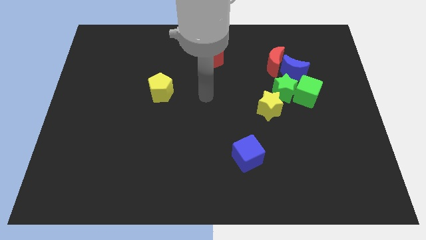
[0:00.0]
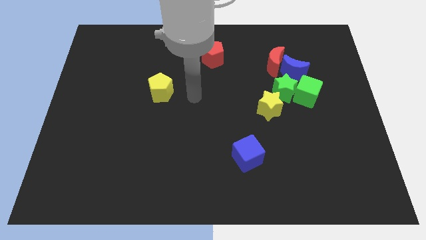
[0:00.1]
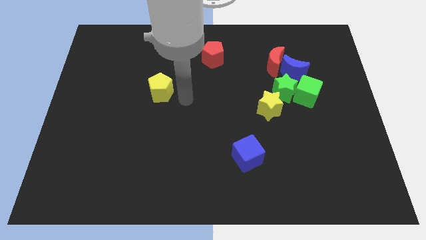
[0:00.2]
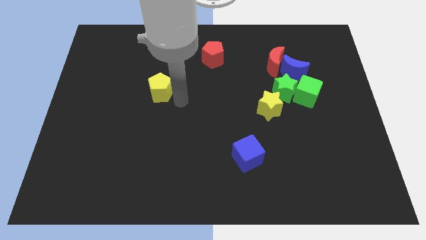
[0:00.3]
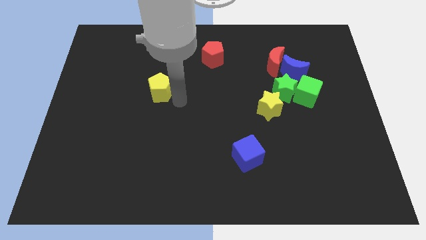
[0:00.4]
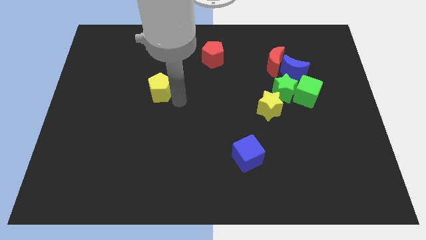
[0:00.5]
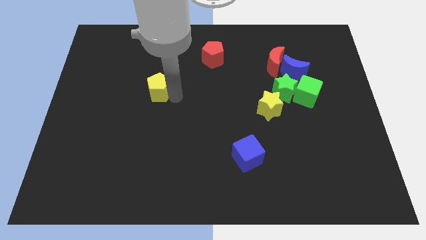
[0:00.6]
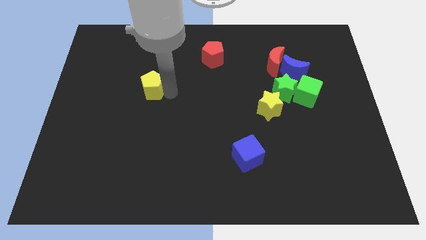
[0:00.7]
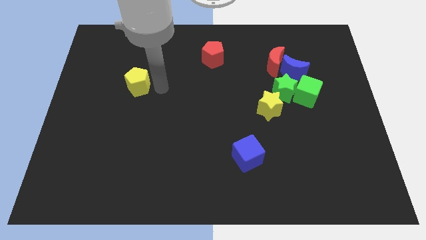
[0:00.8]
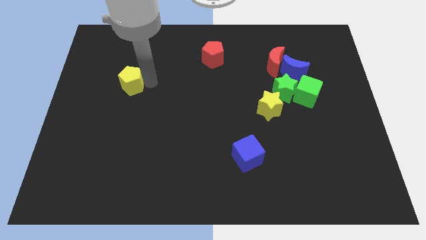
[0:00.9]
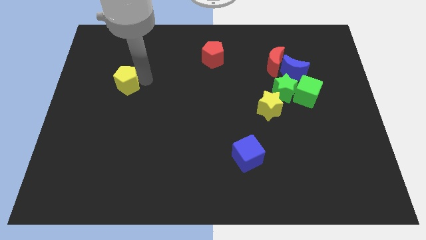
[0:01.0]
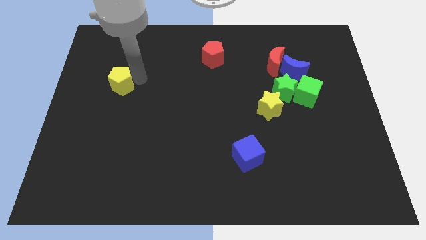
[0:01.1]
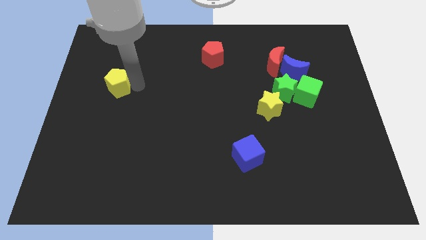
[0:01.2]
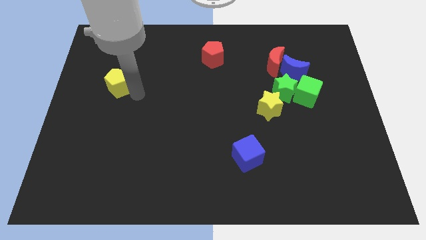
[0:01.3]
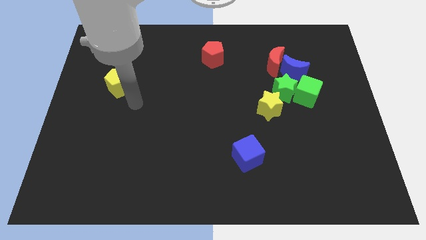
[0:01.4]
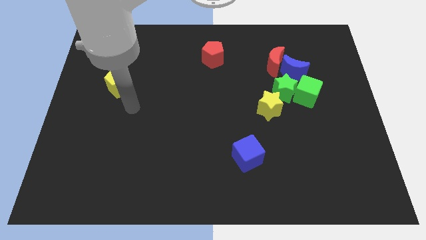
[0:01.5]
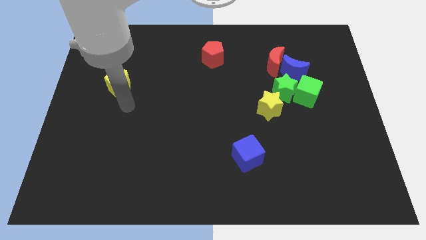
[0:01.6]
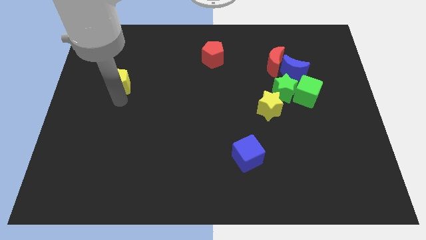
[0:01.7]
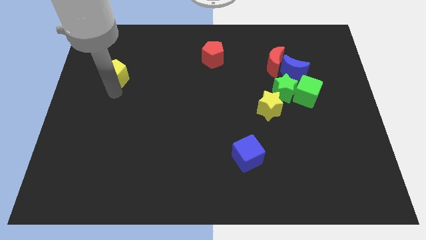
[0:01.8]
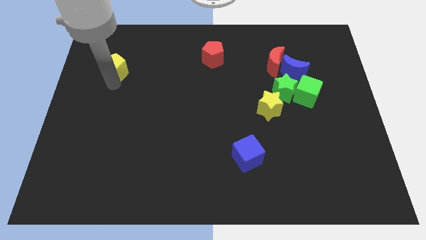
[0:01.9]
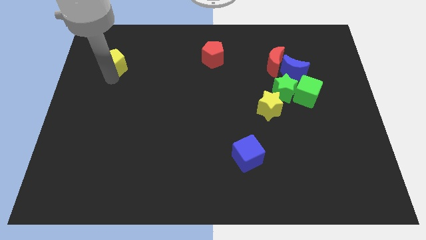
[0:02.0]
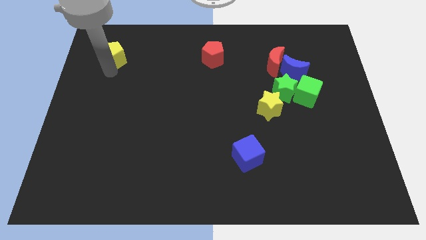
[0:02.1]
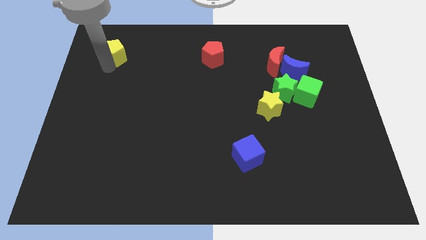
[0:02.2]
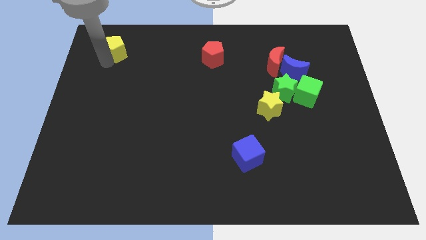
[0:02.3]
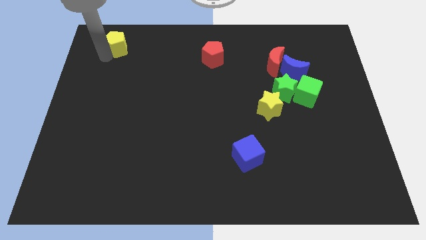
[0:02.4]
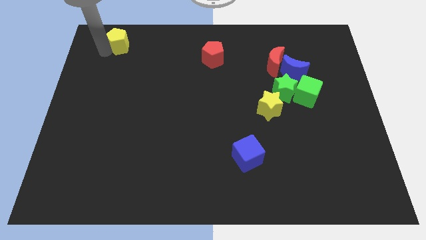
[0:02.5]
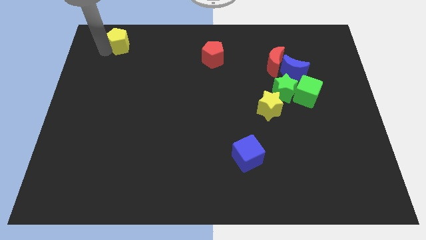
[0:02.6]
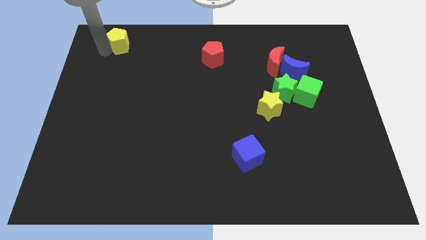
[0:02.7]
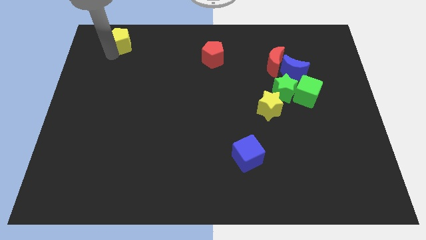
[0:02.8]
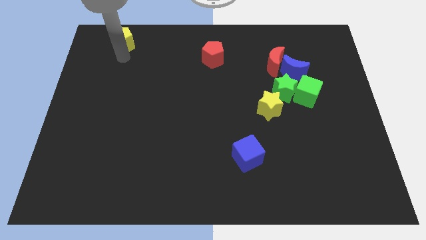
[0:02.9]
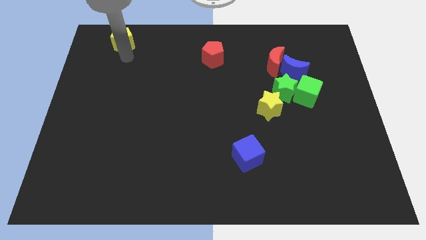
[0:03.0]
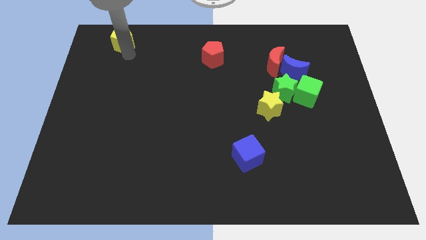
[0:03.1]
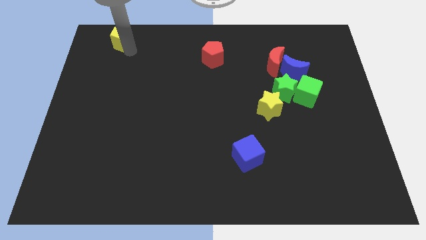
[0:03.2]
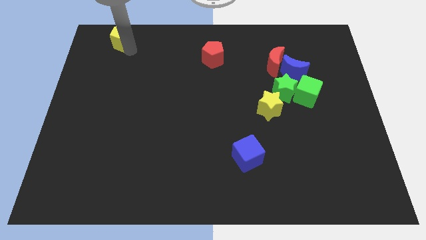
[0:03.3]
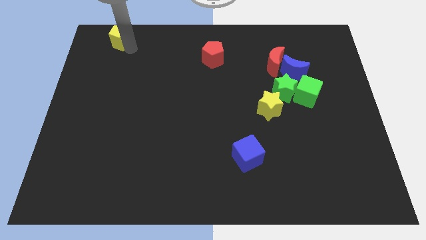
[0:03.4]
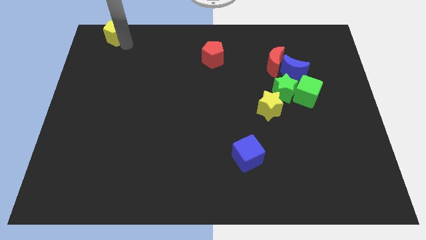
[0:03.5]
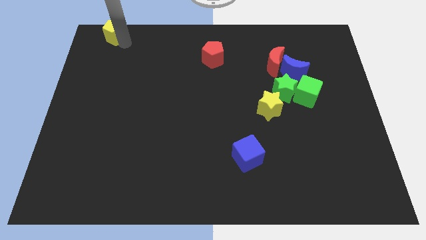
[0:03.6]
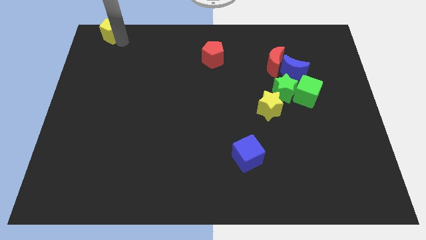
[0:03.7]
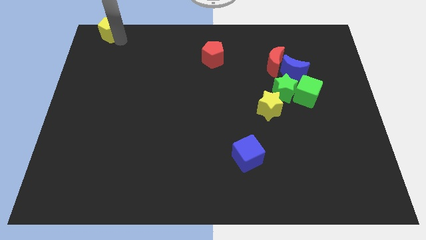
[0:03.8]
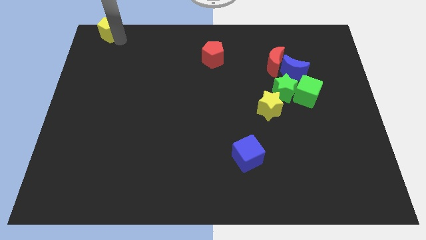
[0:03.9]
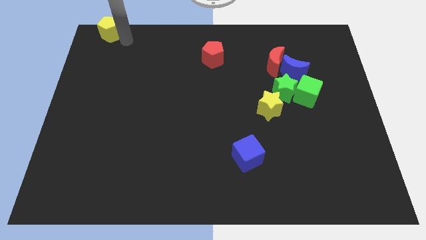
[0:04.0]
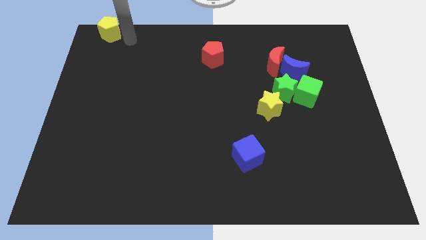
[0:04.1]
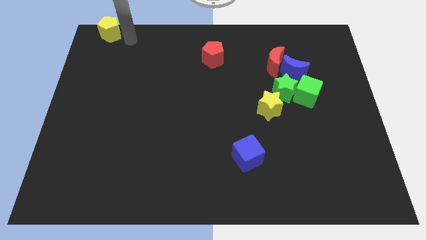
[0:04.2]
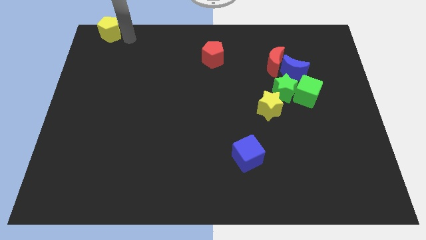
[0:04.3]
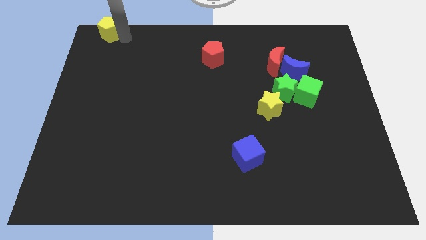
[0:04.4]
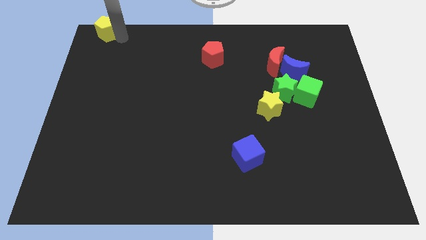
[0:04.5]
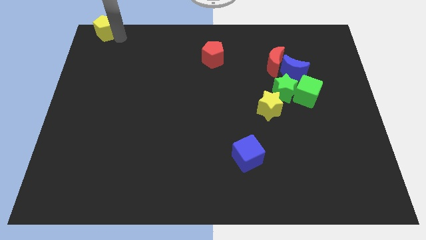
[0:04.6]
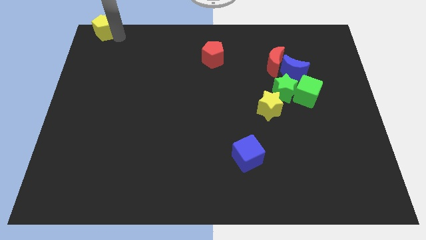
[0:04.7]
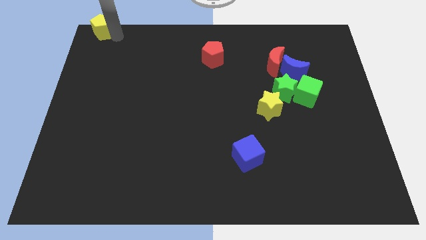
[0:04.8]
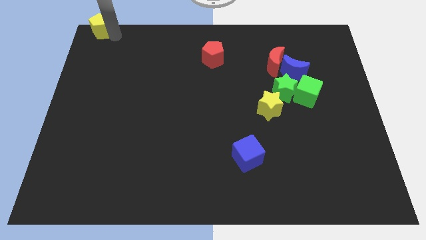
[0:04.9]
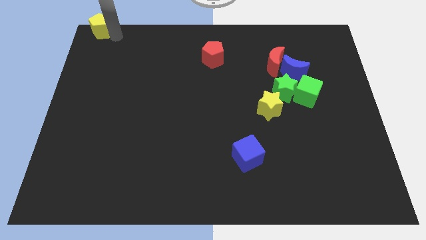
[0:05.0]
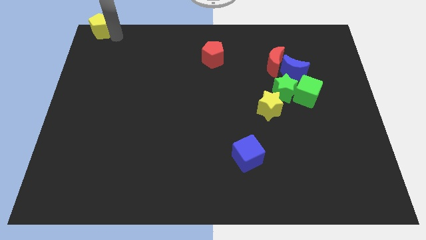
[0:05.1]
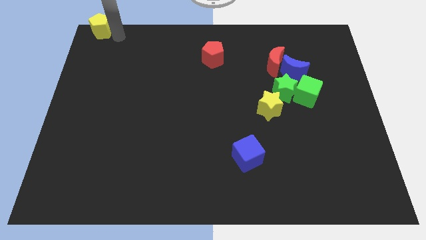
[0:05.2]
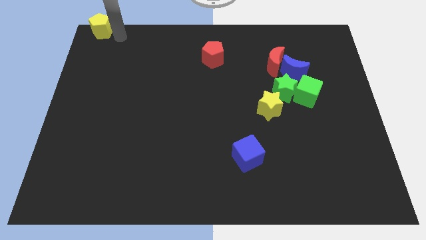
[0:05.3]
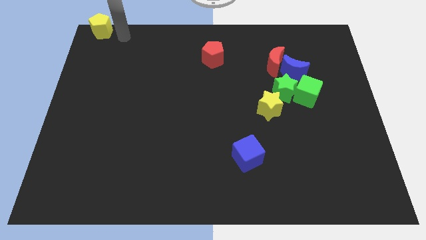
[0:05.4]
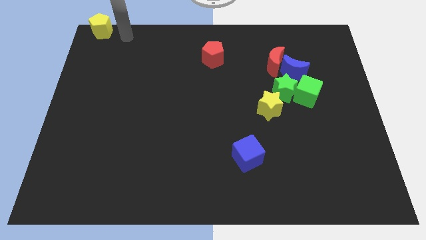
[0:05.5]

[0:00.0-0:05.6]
push the yellow pentagon to the top left corner of the board

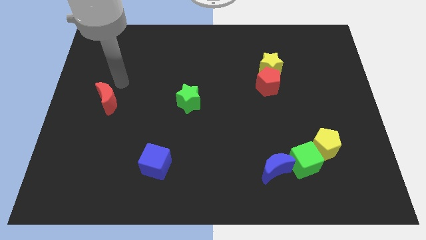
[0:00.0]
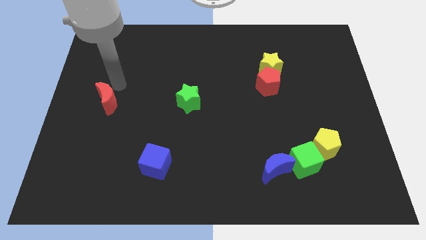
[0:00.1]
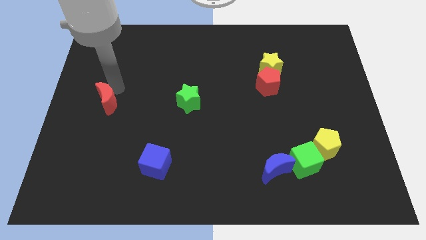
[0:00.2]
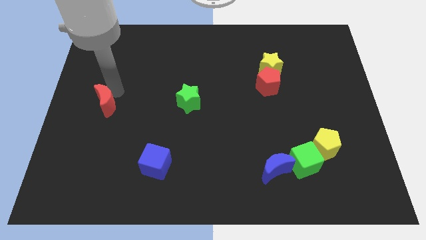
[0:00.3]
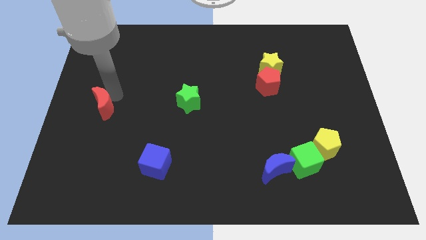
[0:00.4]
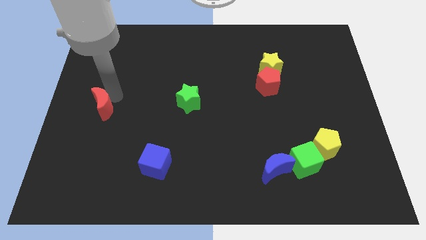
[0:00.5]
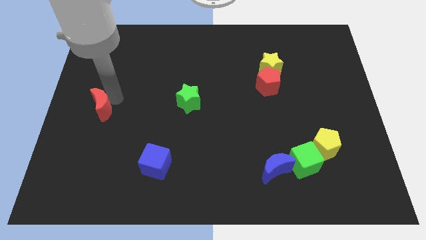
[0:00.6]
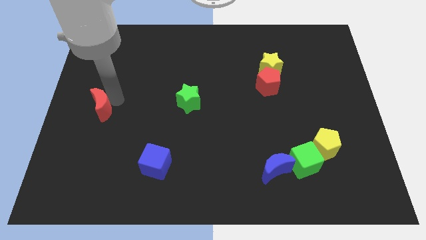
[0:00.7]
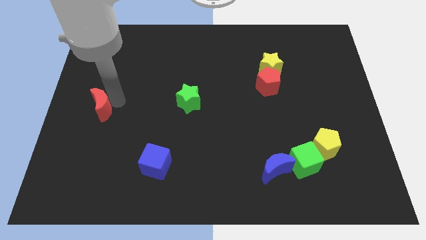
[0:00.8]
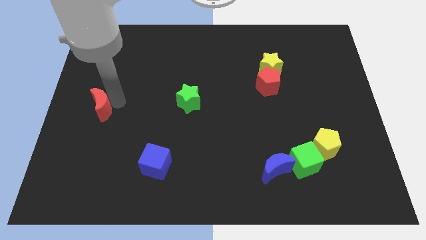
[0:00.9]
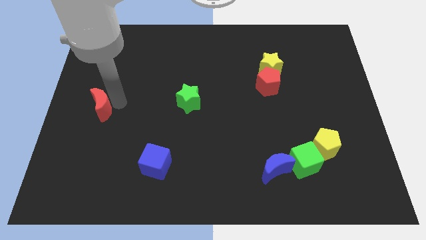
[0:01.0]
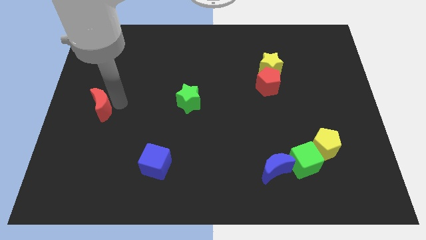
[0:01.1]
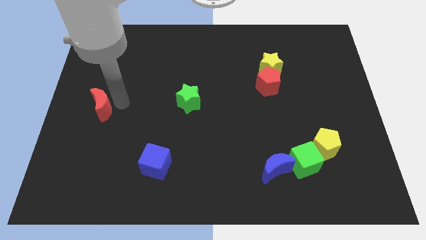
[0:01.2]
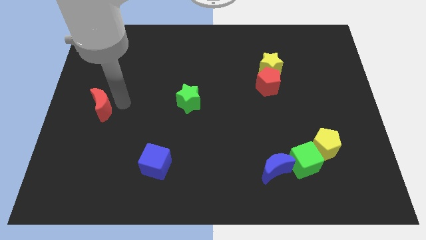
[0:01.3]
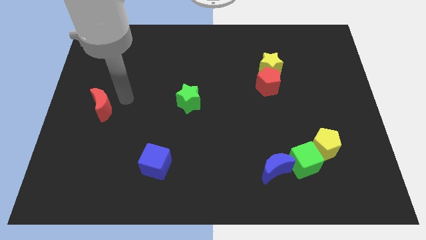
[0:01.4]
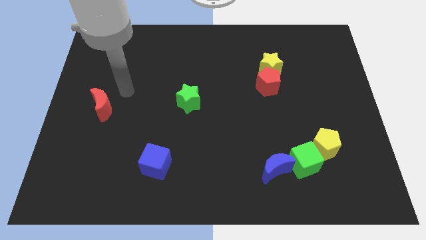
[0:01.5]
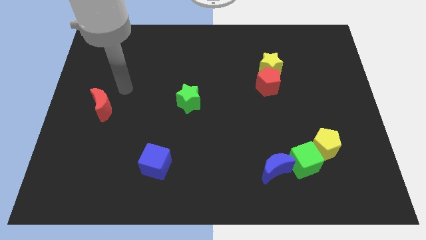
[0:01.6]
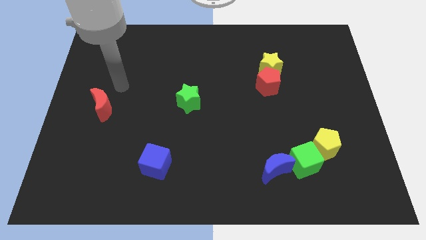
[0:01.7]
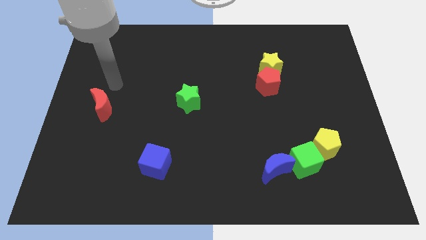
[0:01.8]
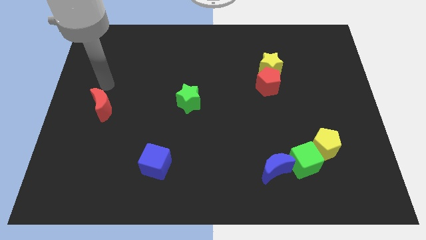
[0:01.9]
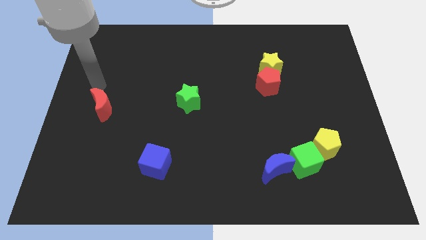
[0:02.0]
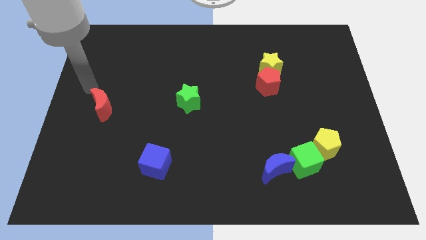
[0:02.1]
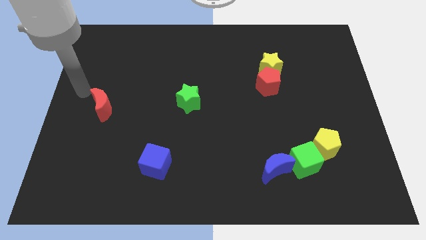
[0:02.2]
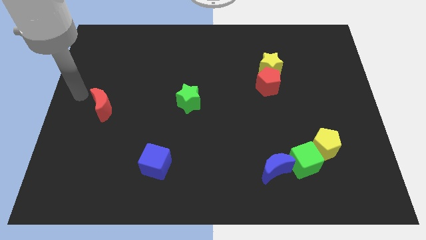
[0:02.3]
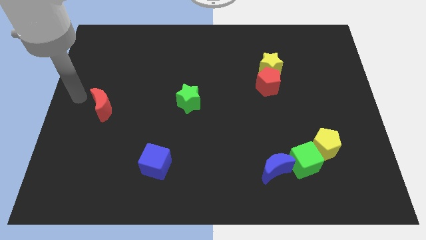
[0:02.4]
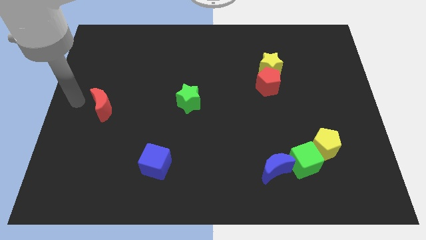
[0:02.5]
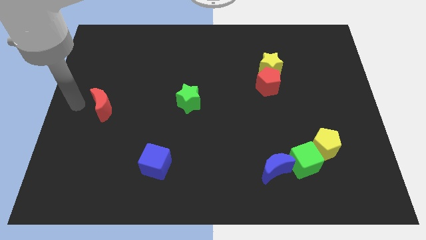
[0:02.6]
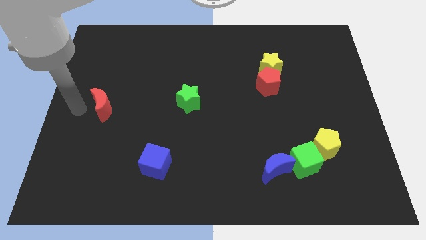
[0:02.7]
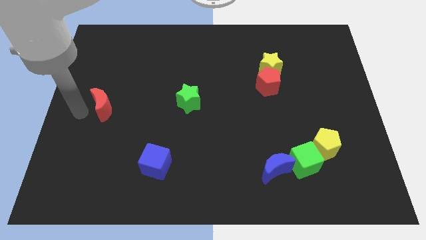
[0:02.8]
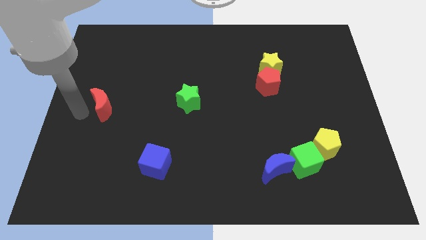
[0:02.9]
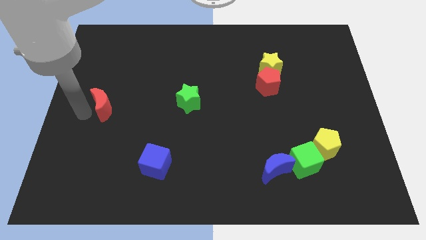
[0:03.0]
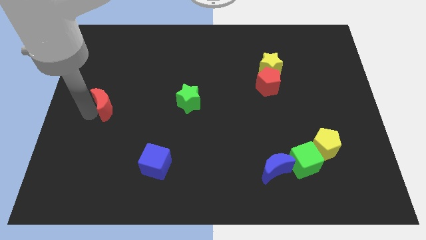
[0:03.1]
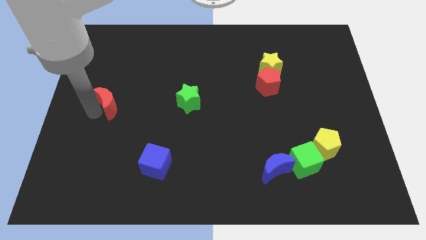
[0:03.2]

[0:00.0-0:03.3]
place the arm left to the red moon

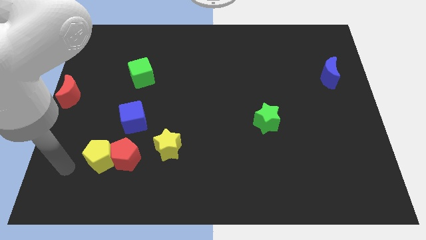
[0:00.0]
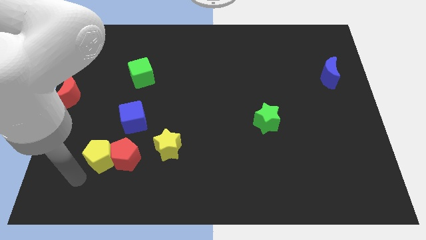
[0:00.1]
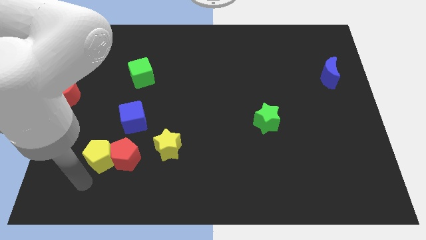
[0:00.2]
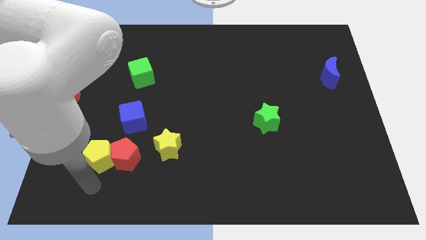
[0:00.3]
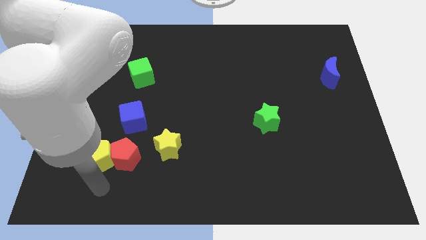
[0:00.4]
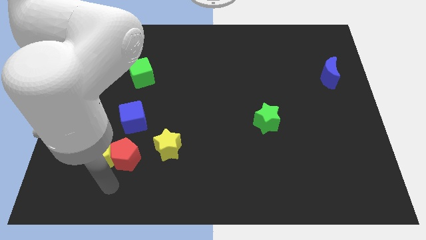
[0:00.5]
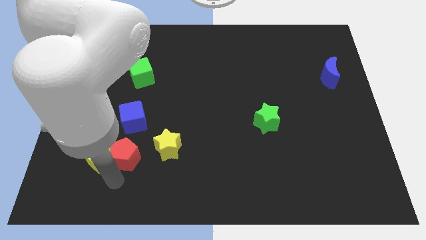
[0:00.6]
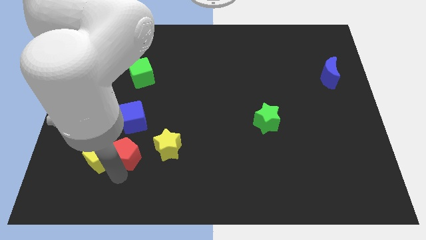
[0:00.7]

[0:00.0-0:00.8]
place the arm to the down of the red pentagon
